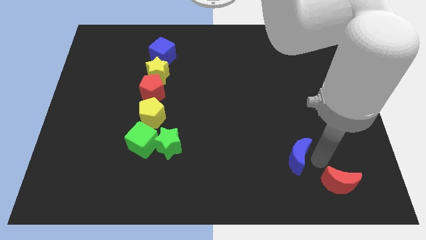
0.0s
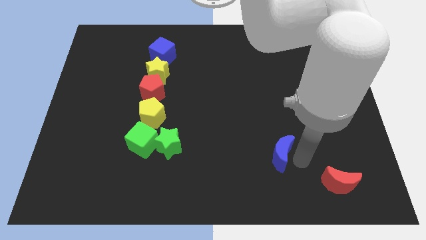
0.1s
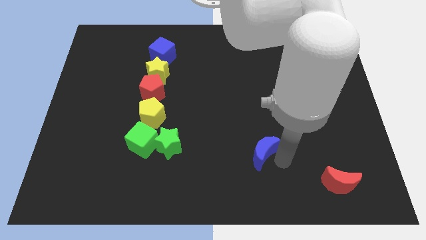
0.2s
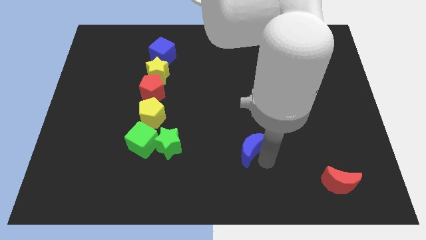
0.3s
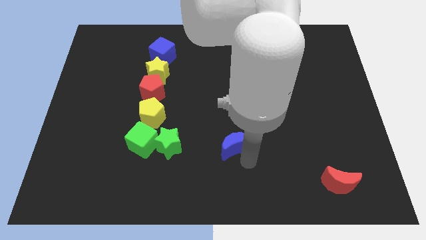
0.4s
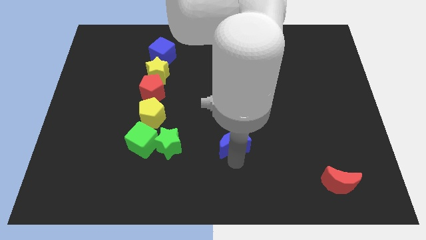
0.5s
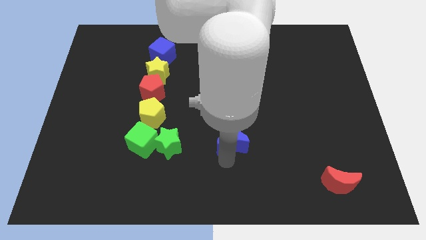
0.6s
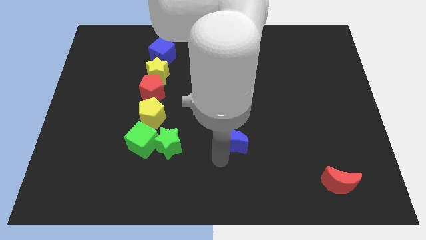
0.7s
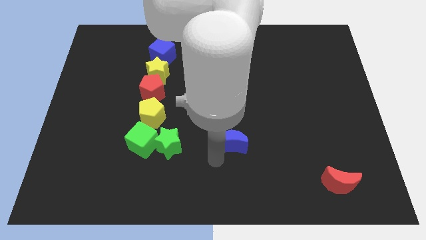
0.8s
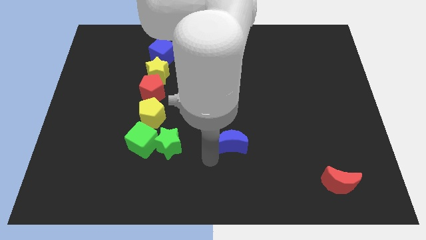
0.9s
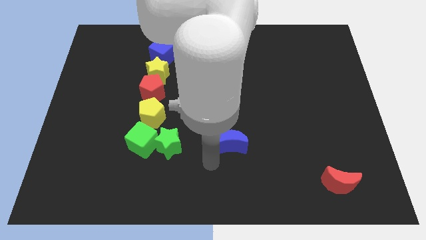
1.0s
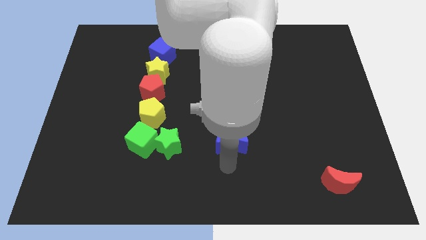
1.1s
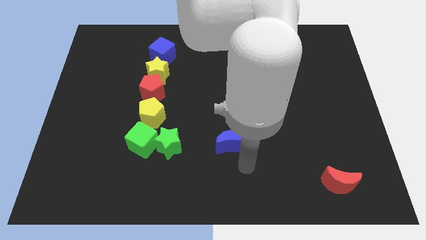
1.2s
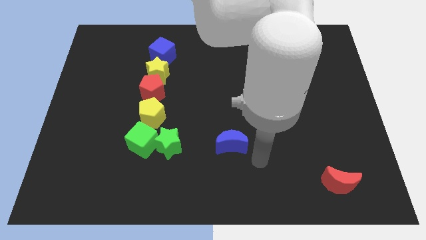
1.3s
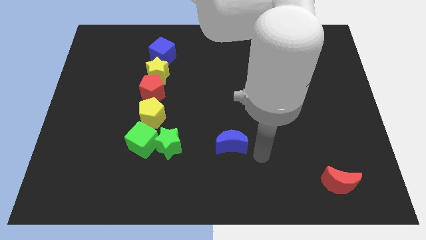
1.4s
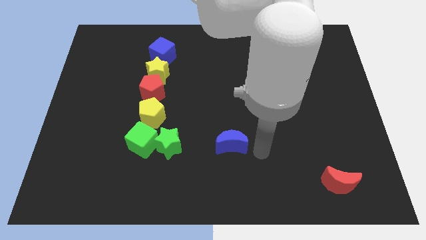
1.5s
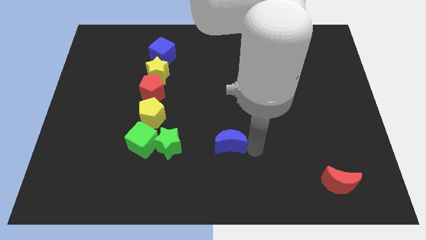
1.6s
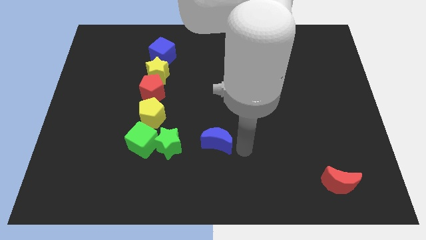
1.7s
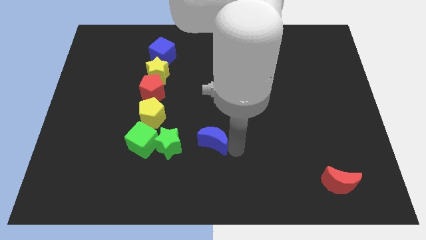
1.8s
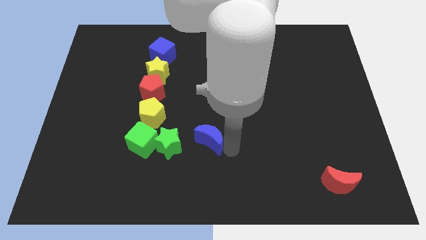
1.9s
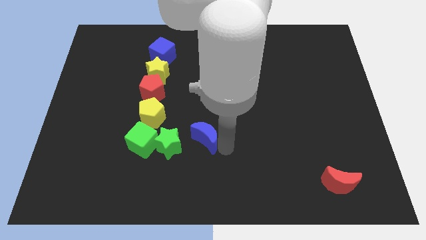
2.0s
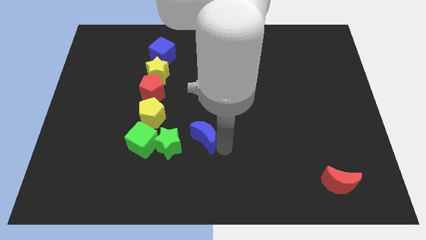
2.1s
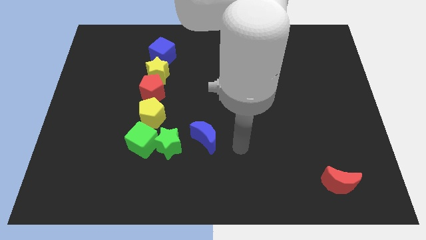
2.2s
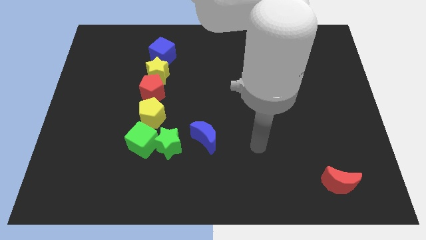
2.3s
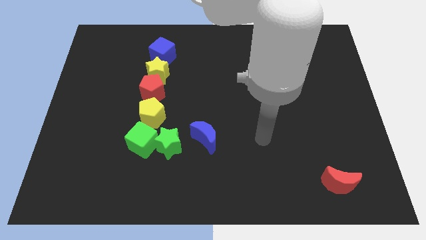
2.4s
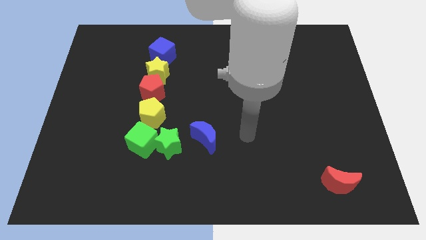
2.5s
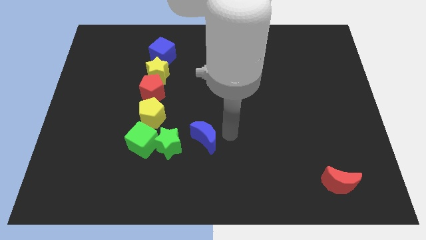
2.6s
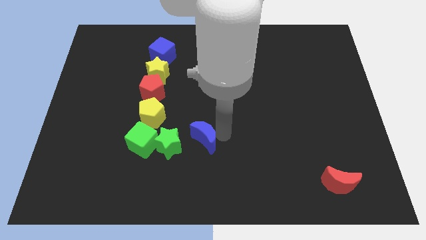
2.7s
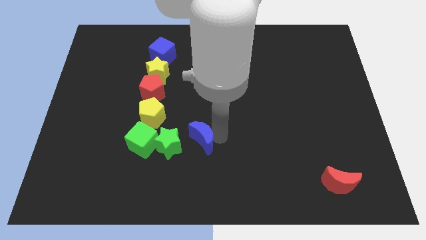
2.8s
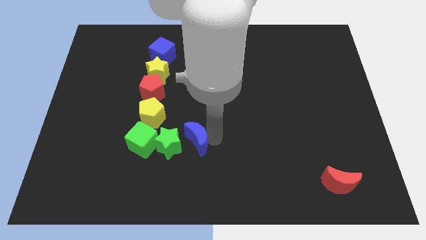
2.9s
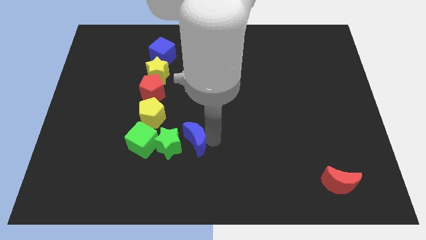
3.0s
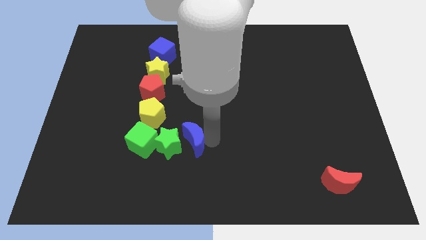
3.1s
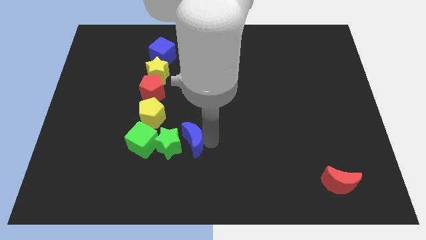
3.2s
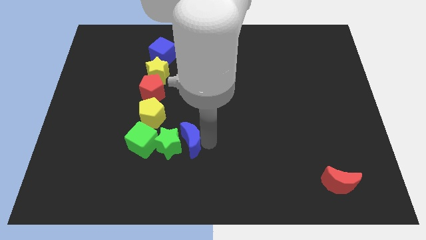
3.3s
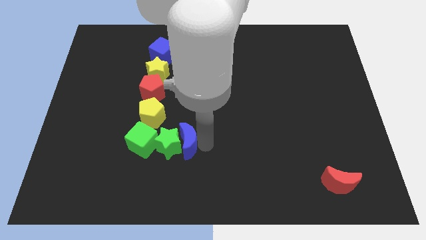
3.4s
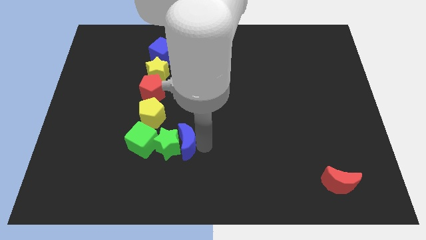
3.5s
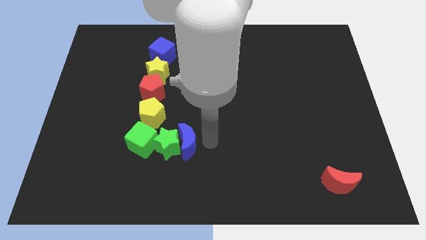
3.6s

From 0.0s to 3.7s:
slide the blue crescent into the right side of the green star

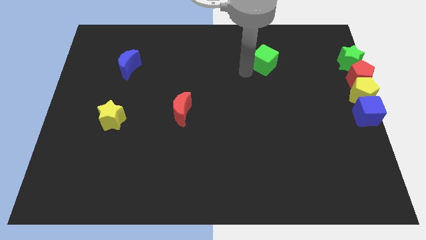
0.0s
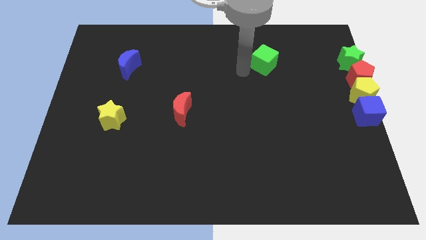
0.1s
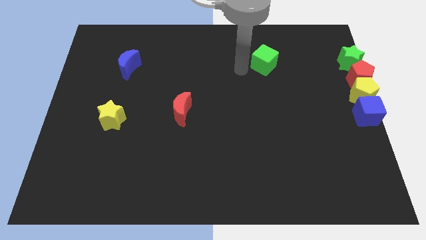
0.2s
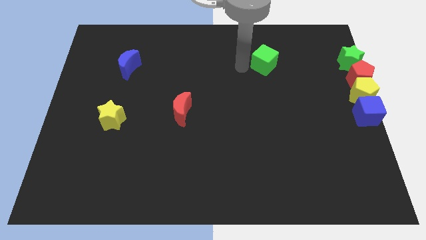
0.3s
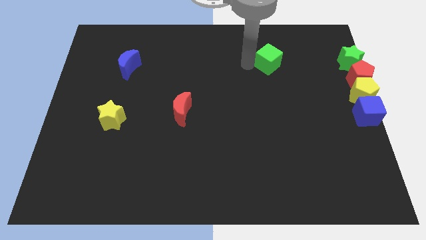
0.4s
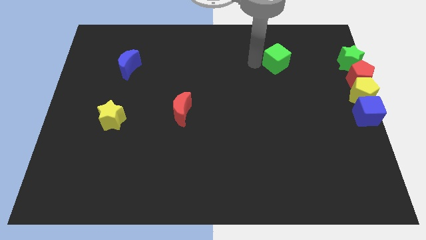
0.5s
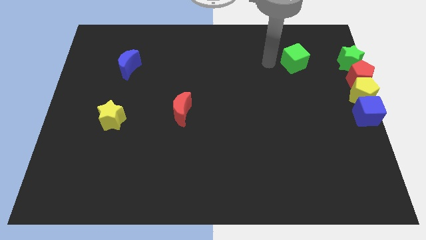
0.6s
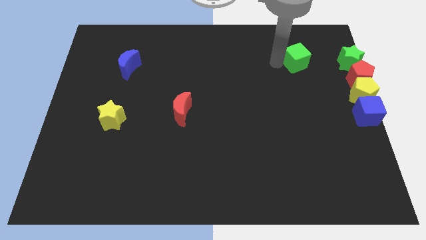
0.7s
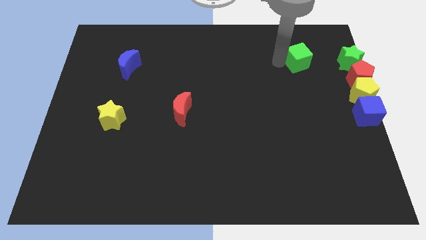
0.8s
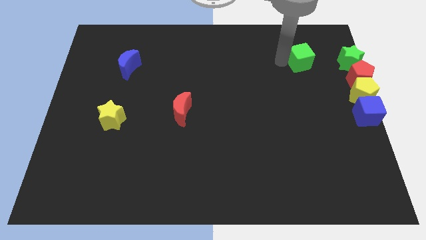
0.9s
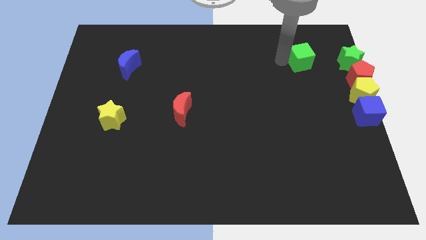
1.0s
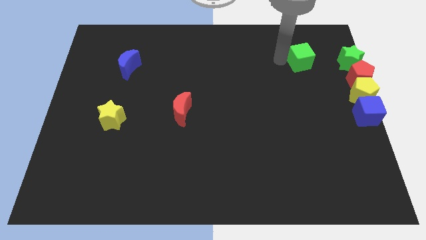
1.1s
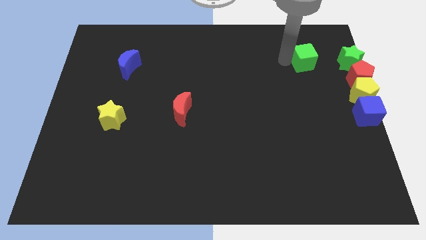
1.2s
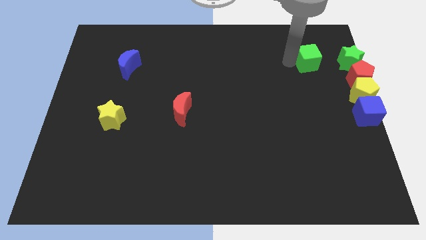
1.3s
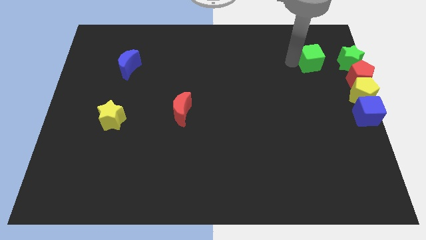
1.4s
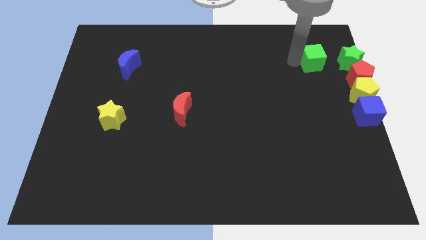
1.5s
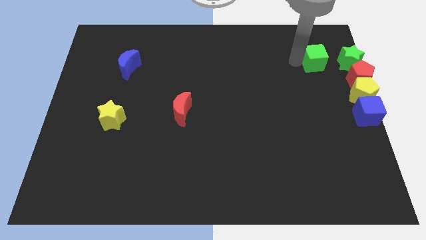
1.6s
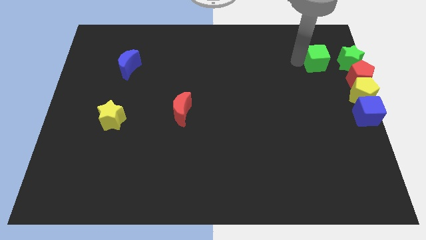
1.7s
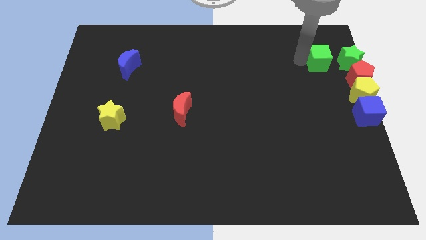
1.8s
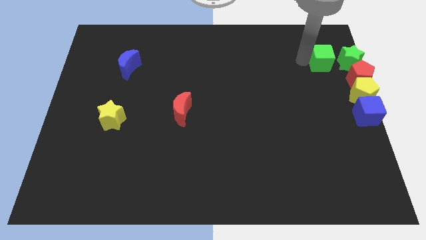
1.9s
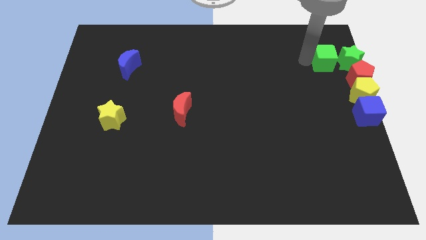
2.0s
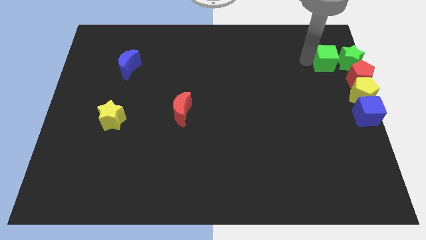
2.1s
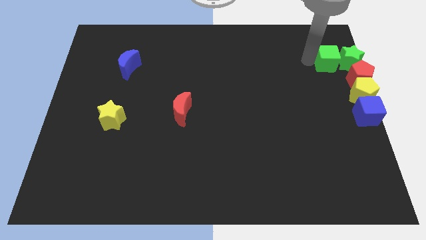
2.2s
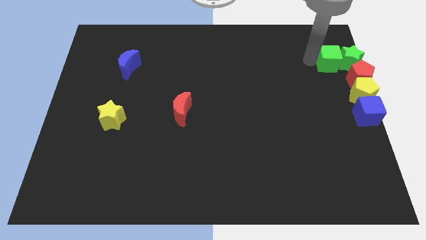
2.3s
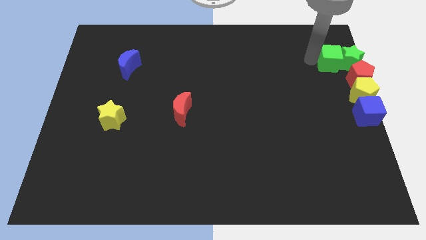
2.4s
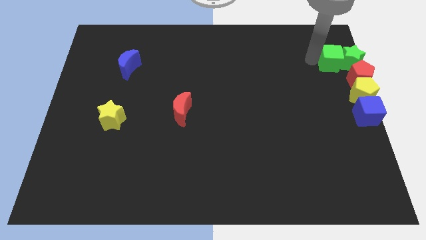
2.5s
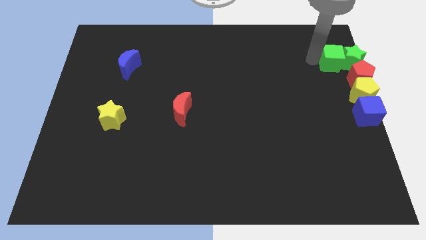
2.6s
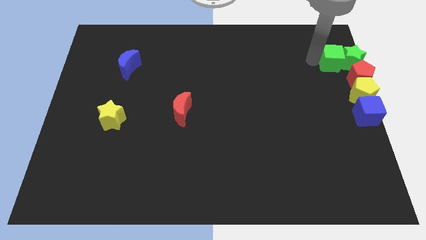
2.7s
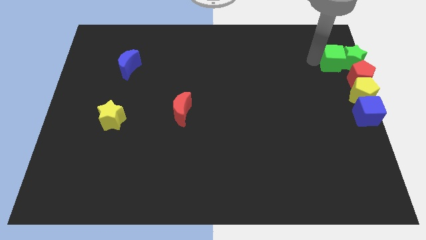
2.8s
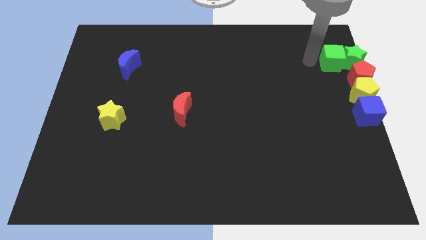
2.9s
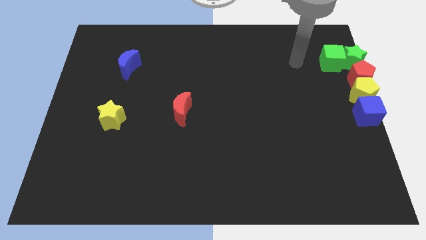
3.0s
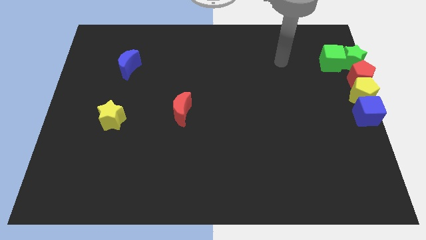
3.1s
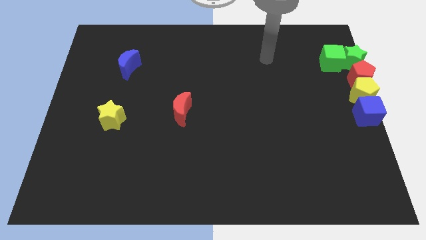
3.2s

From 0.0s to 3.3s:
move the green cube into the left side of the green star

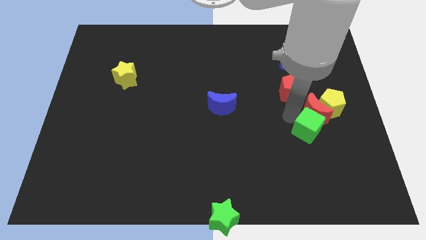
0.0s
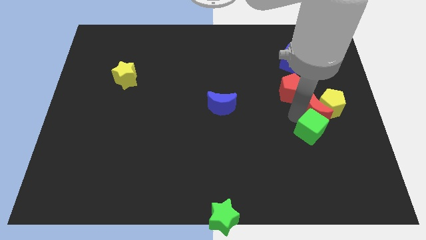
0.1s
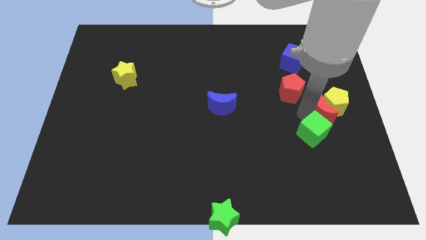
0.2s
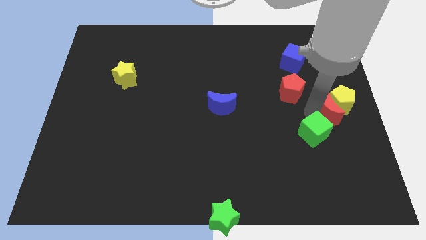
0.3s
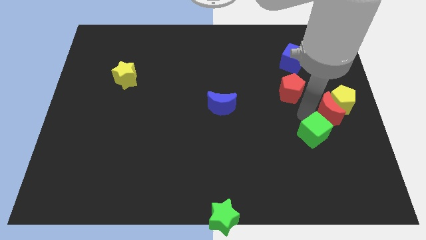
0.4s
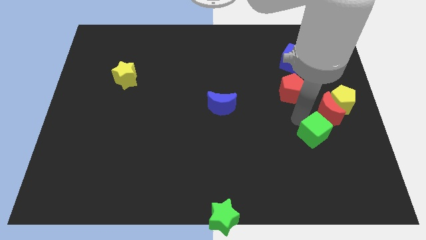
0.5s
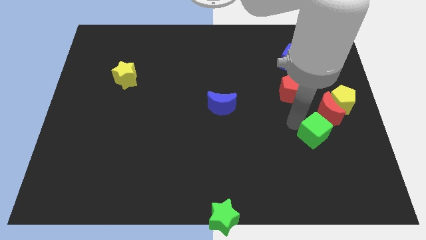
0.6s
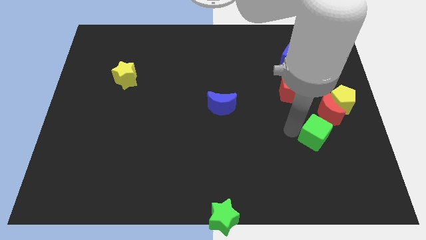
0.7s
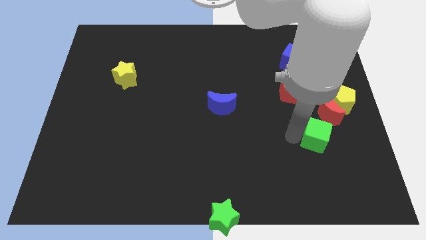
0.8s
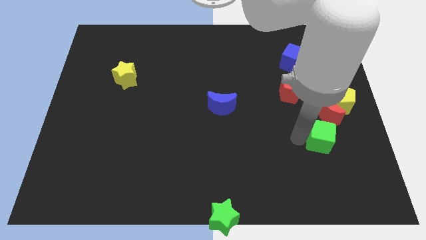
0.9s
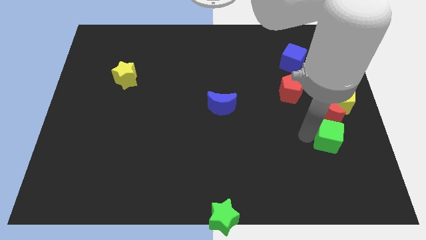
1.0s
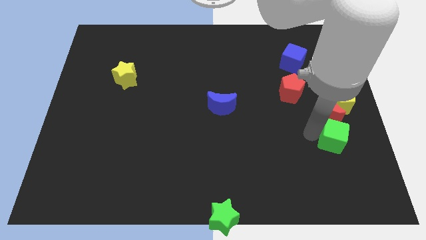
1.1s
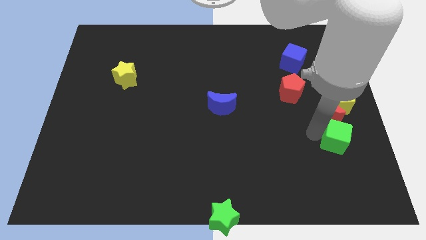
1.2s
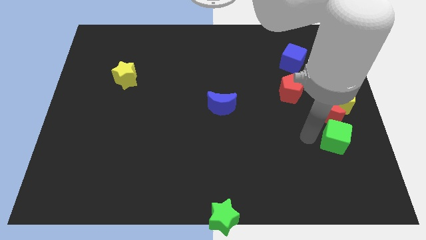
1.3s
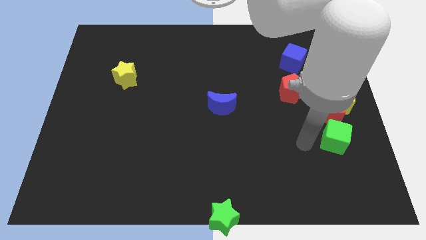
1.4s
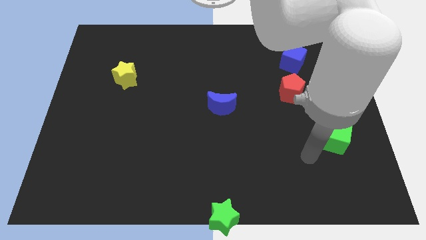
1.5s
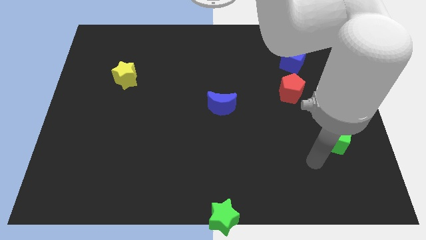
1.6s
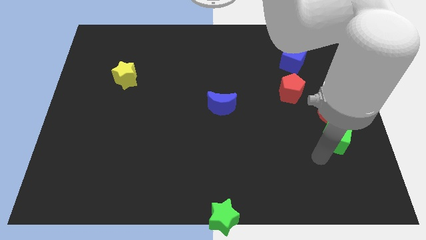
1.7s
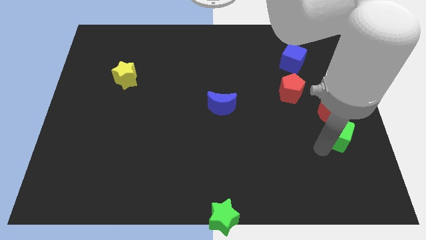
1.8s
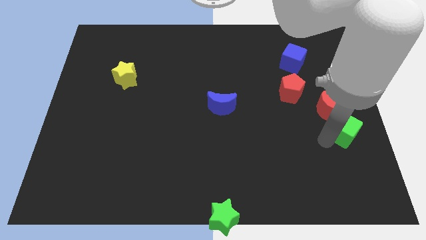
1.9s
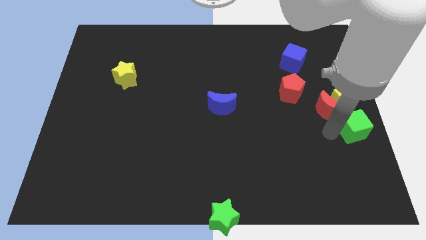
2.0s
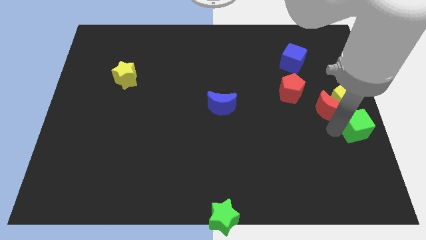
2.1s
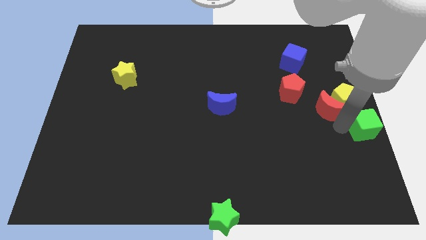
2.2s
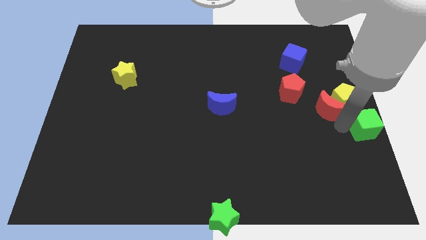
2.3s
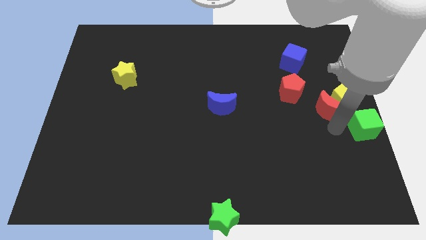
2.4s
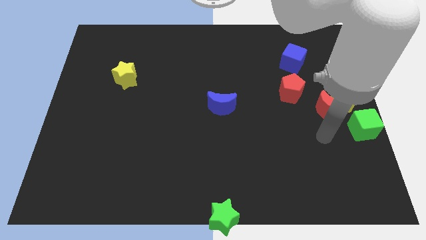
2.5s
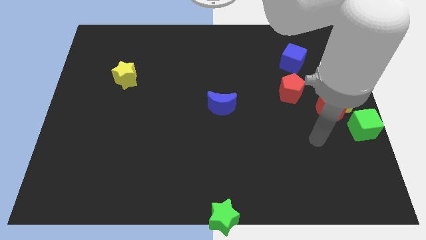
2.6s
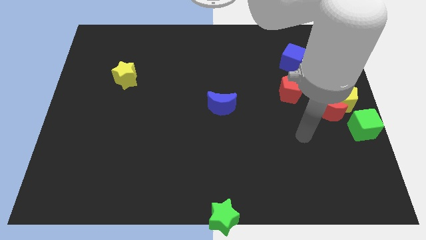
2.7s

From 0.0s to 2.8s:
place green cube to the right center of the board
